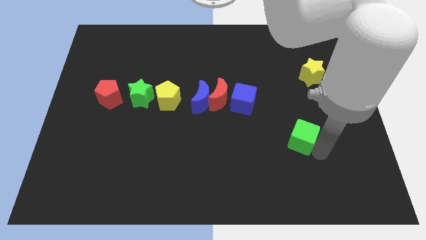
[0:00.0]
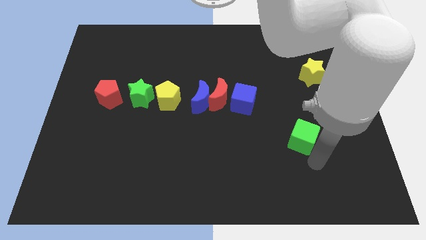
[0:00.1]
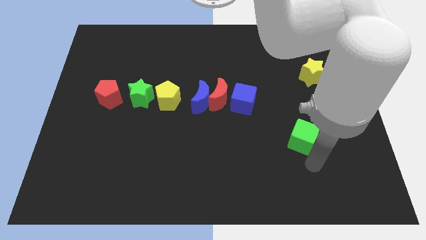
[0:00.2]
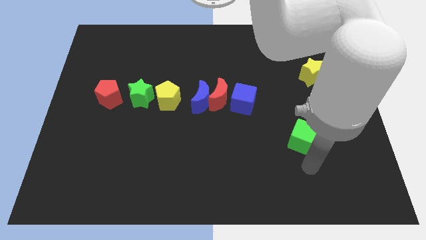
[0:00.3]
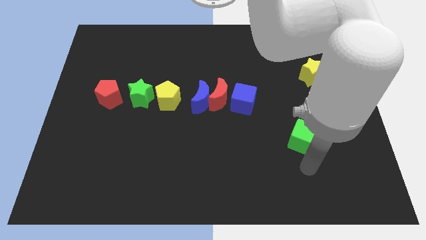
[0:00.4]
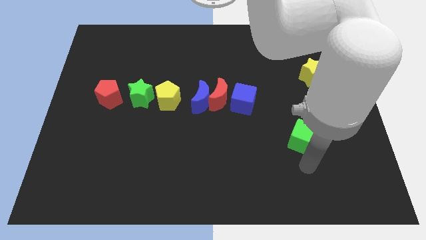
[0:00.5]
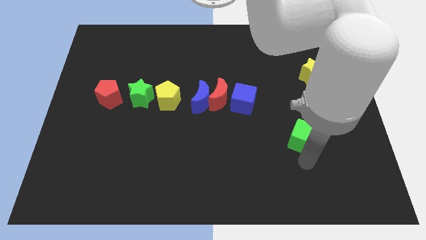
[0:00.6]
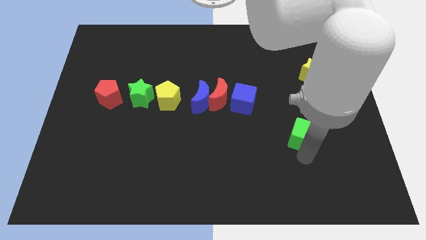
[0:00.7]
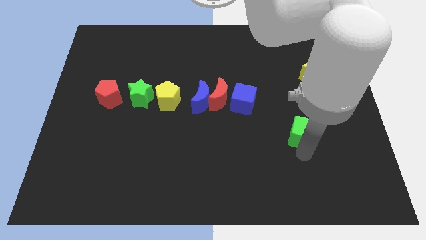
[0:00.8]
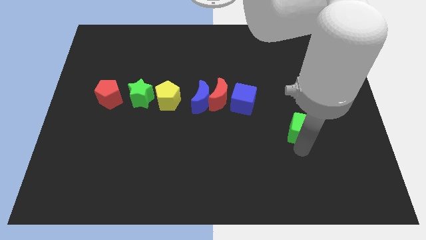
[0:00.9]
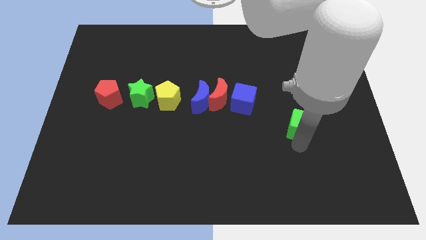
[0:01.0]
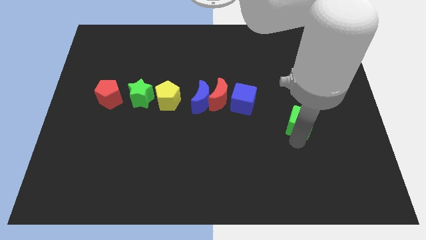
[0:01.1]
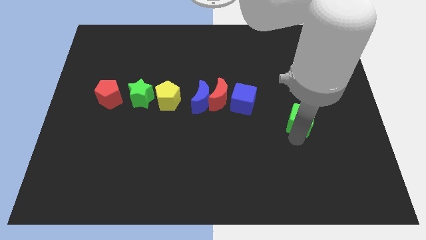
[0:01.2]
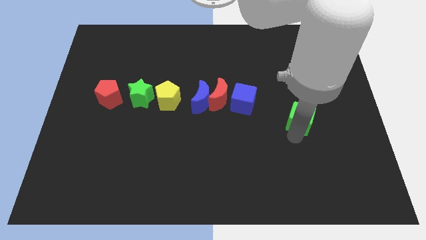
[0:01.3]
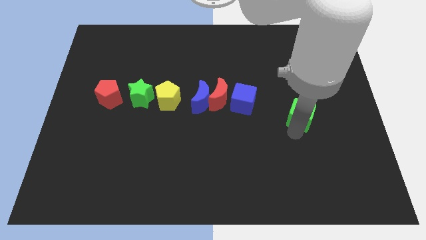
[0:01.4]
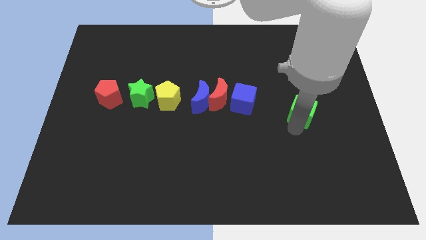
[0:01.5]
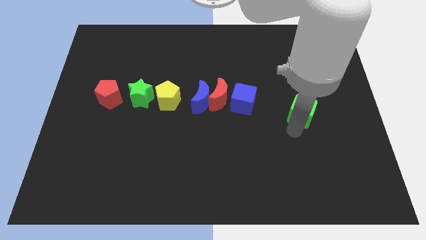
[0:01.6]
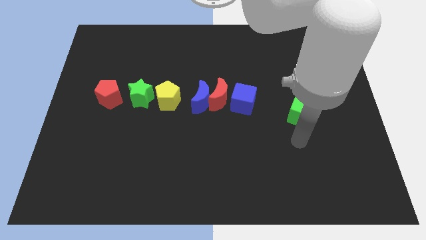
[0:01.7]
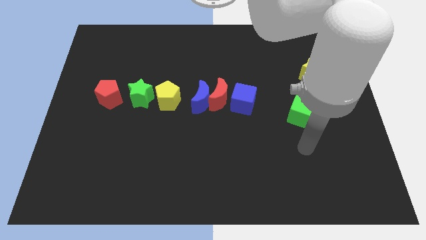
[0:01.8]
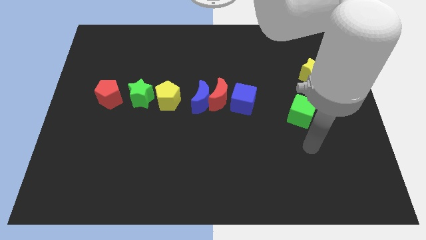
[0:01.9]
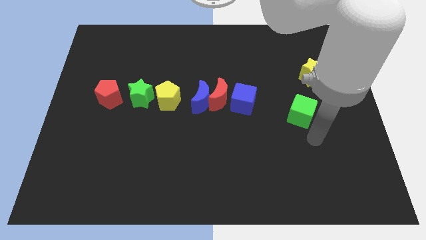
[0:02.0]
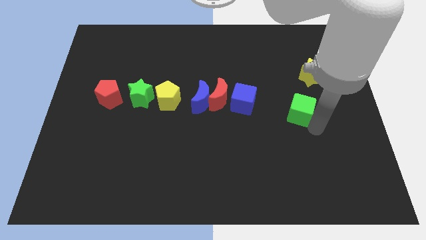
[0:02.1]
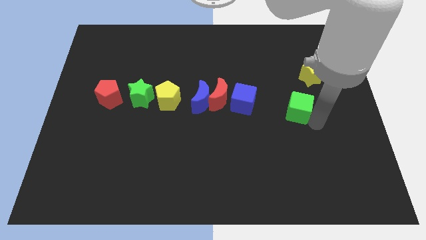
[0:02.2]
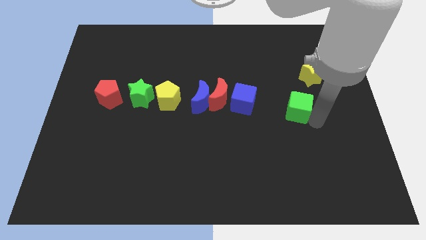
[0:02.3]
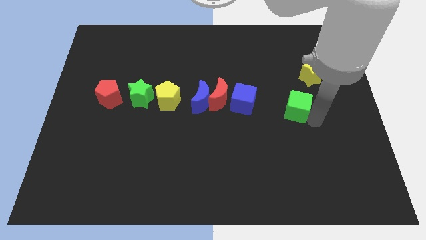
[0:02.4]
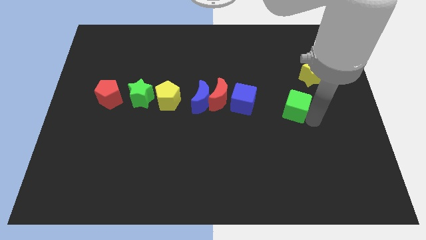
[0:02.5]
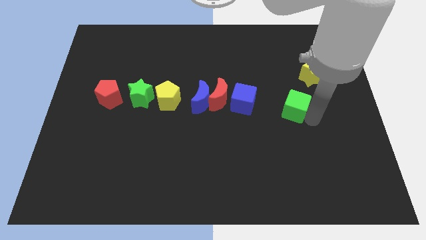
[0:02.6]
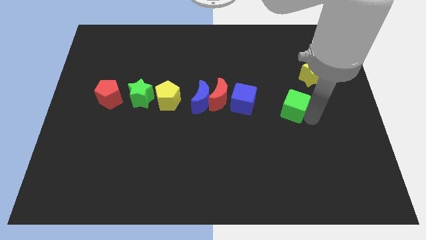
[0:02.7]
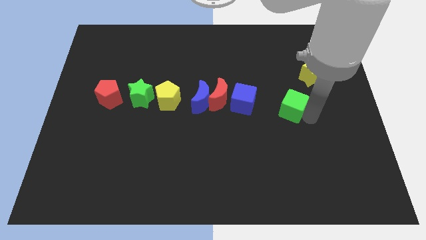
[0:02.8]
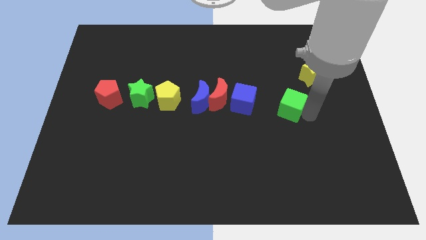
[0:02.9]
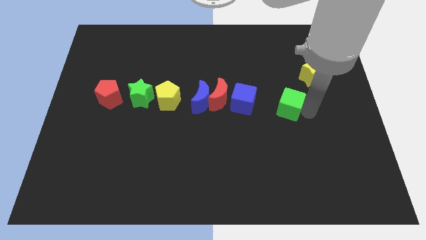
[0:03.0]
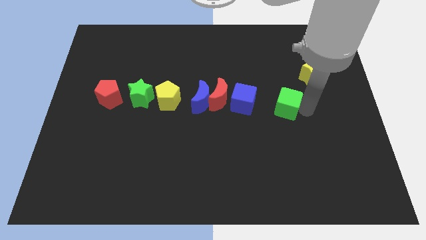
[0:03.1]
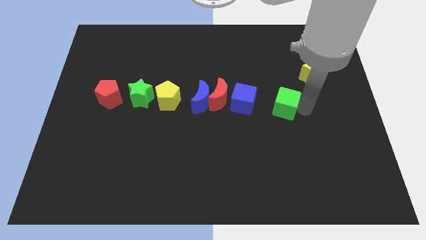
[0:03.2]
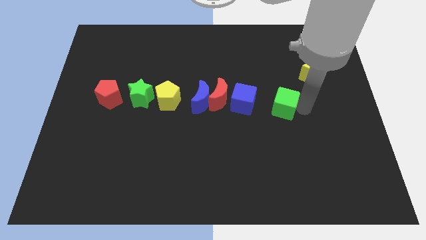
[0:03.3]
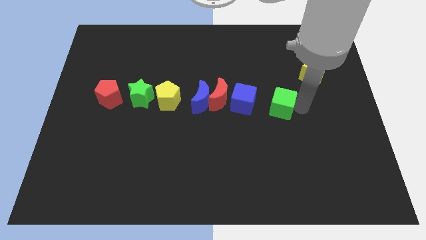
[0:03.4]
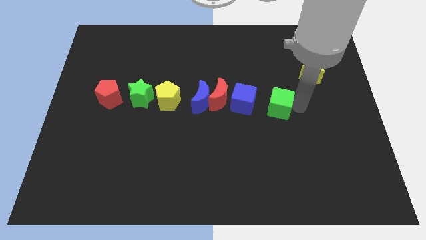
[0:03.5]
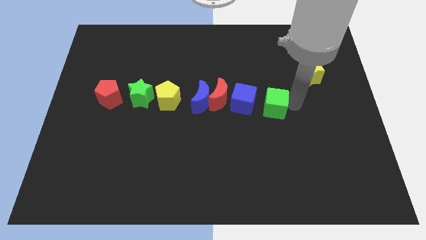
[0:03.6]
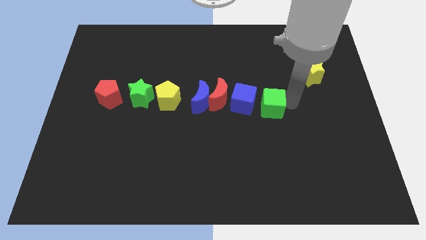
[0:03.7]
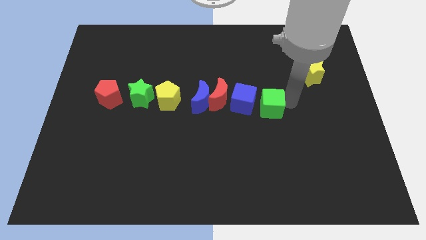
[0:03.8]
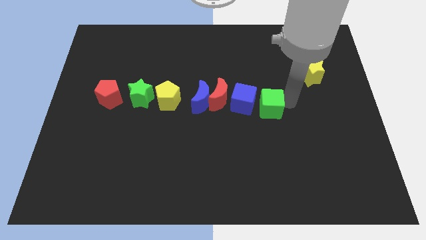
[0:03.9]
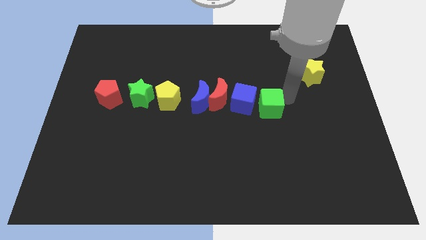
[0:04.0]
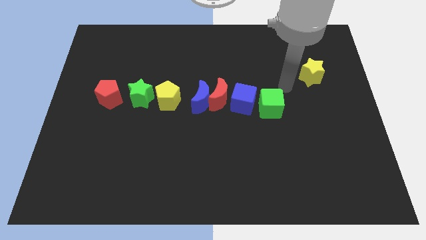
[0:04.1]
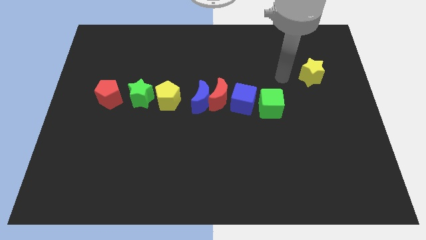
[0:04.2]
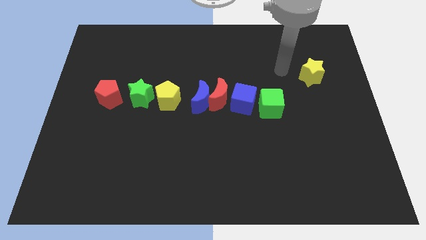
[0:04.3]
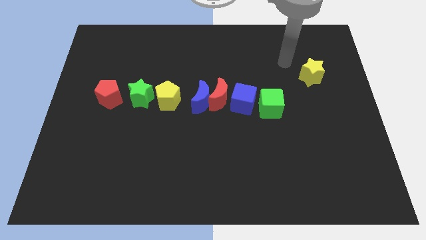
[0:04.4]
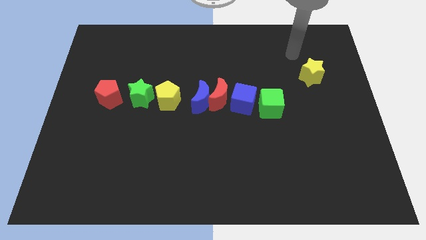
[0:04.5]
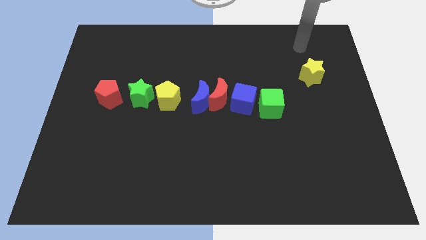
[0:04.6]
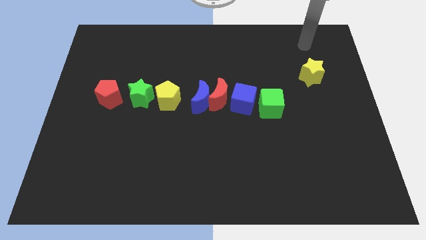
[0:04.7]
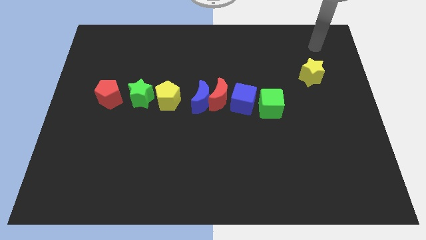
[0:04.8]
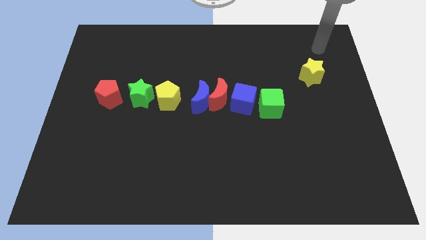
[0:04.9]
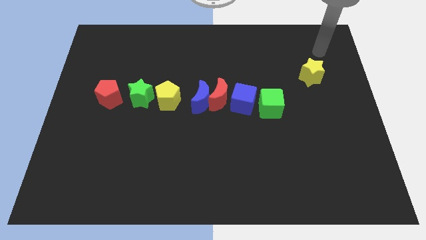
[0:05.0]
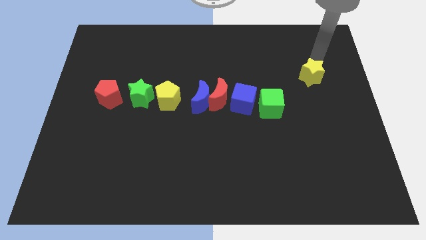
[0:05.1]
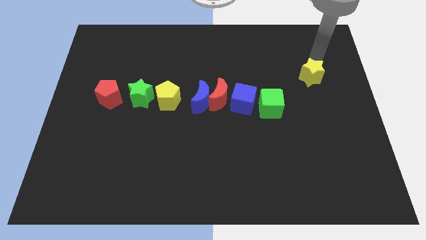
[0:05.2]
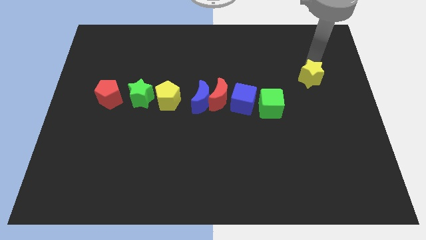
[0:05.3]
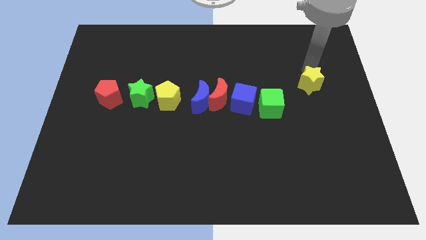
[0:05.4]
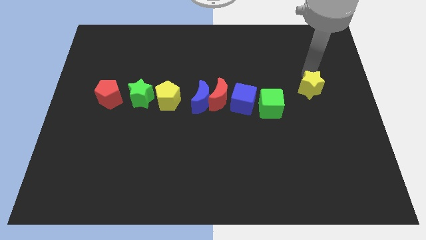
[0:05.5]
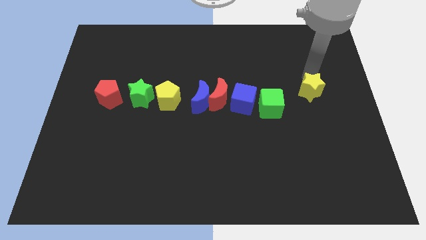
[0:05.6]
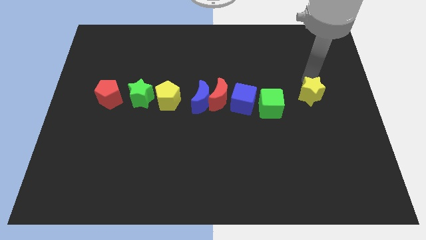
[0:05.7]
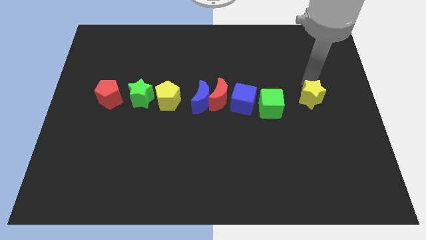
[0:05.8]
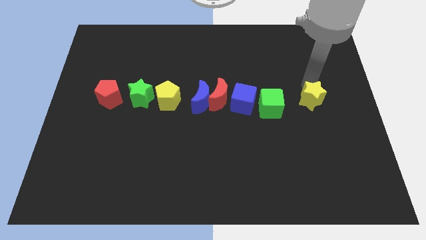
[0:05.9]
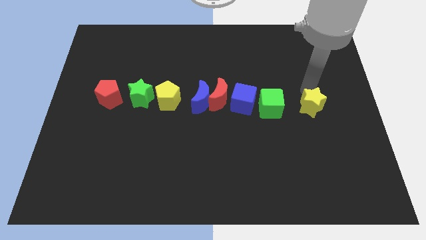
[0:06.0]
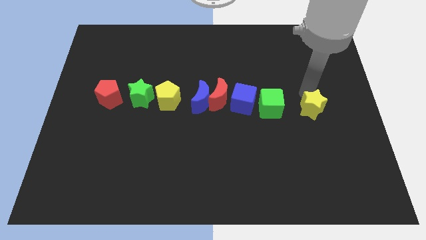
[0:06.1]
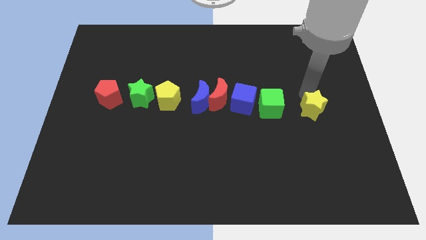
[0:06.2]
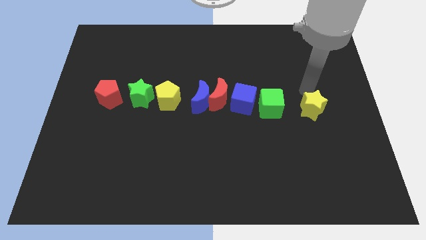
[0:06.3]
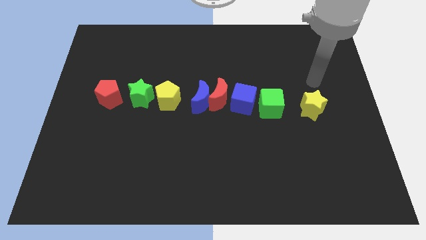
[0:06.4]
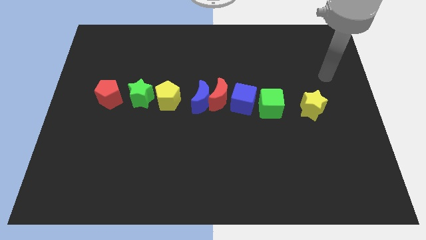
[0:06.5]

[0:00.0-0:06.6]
move the yellow star and green cube to the horizontal line

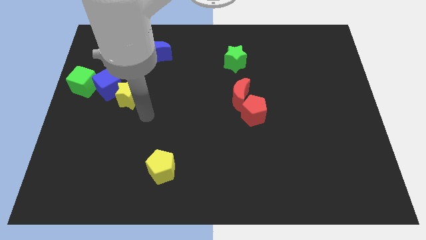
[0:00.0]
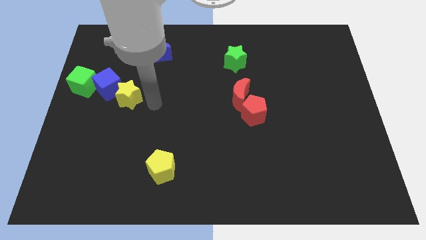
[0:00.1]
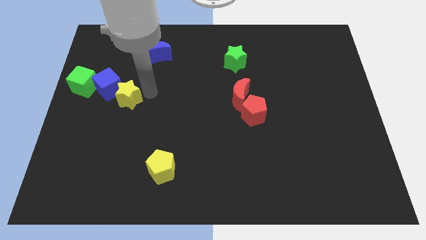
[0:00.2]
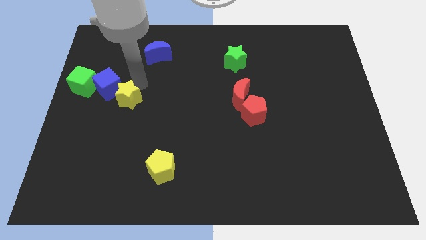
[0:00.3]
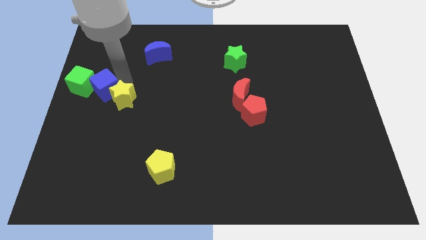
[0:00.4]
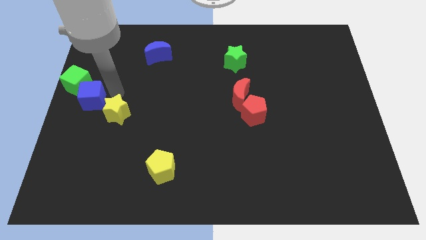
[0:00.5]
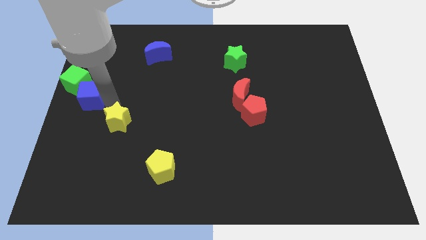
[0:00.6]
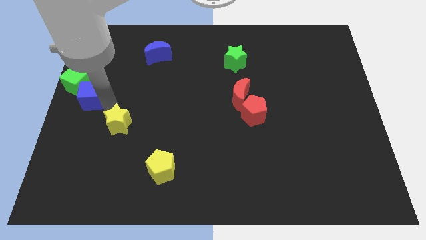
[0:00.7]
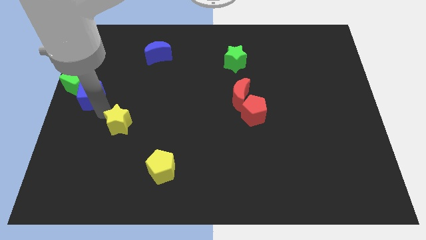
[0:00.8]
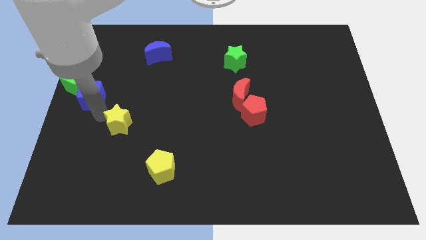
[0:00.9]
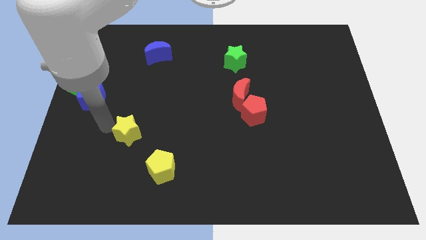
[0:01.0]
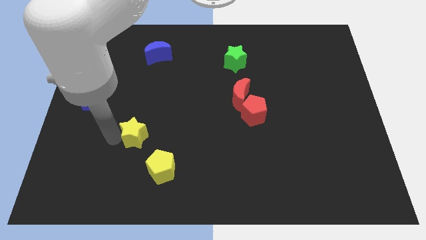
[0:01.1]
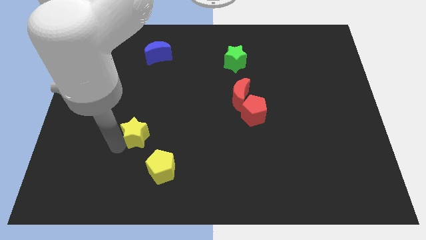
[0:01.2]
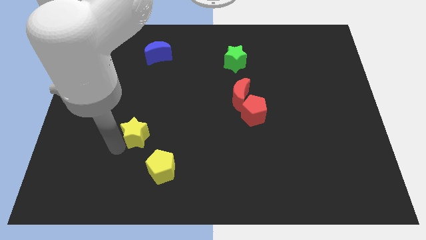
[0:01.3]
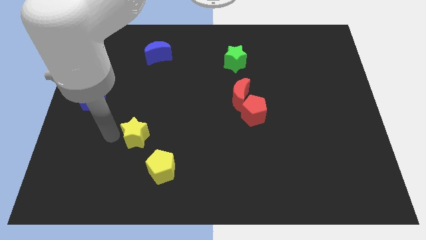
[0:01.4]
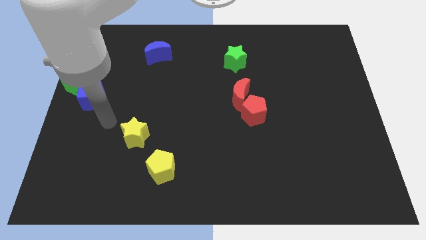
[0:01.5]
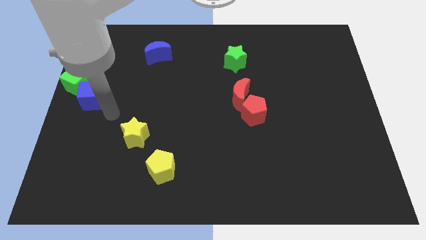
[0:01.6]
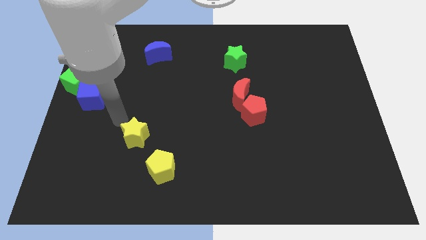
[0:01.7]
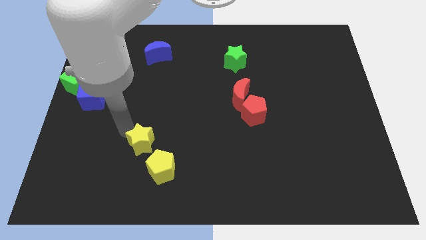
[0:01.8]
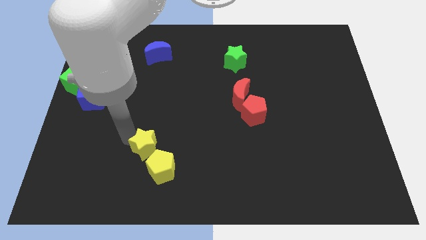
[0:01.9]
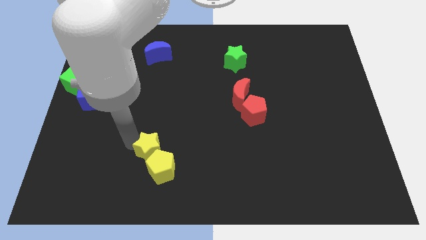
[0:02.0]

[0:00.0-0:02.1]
separate the yellow star from the blue cube

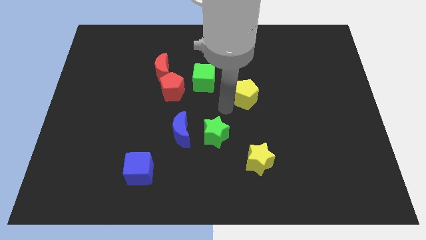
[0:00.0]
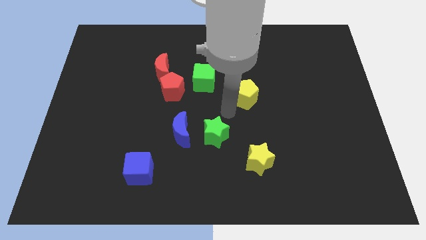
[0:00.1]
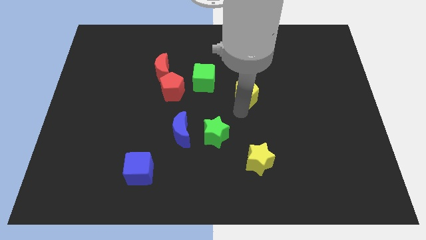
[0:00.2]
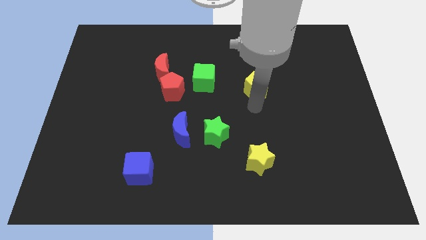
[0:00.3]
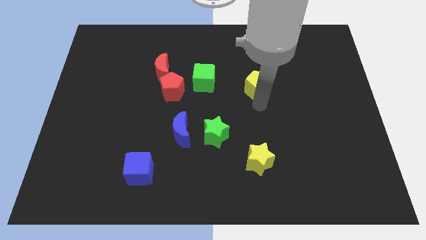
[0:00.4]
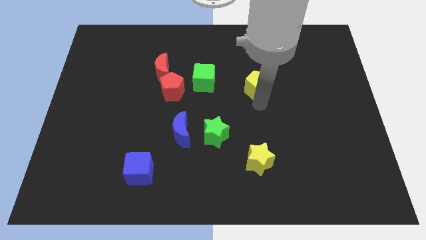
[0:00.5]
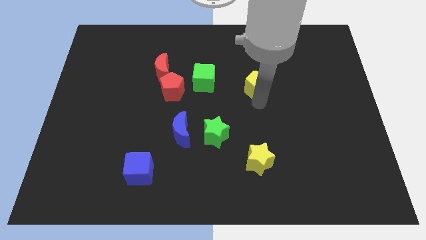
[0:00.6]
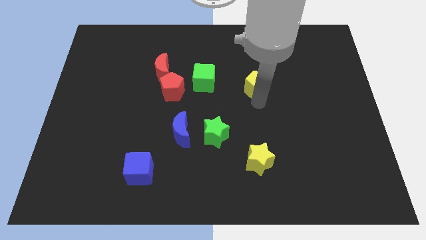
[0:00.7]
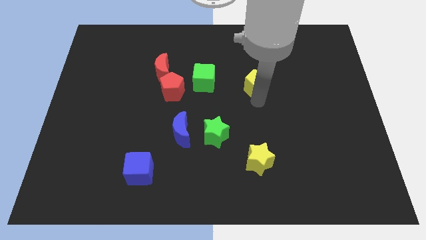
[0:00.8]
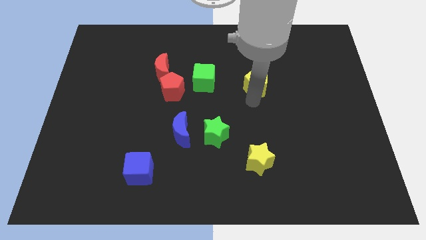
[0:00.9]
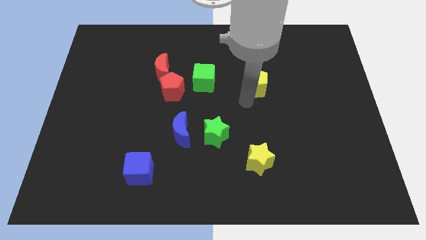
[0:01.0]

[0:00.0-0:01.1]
move the yellow pentagon left side of the green cube
